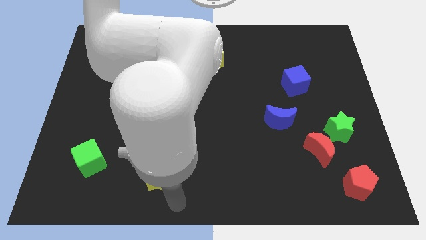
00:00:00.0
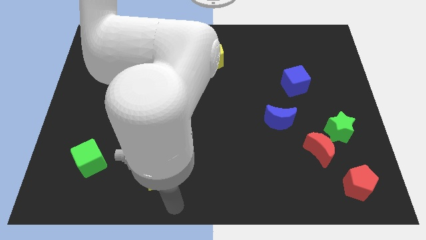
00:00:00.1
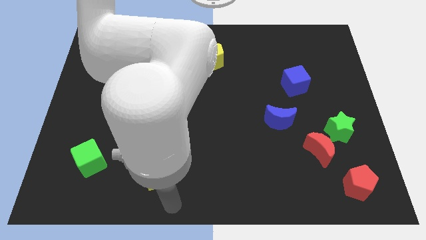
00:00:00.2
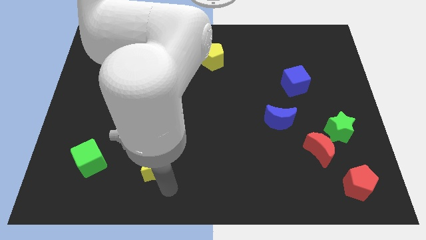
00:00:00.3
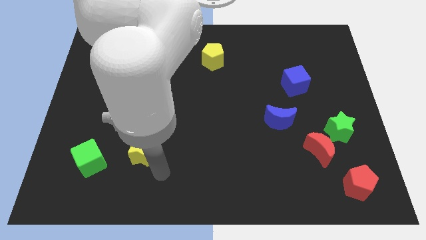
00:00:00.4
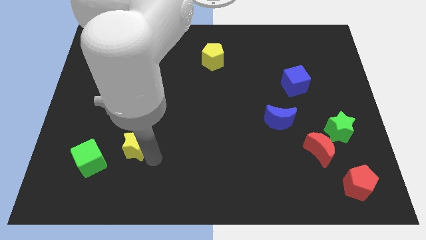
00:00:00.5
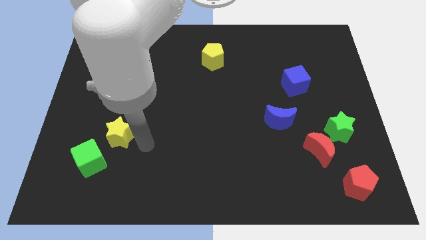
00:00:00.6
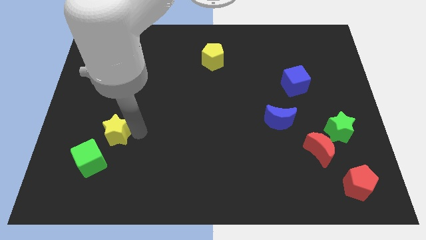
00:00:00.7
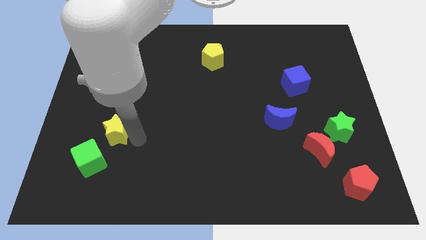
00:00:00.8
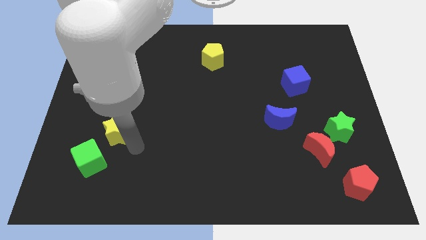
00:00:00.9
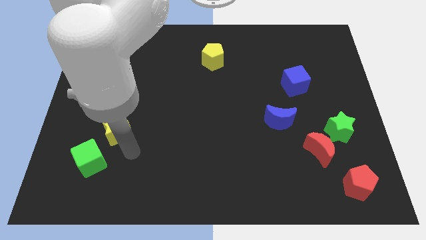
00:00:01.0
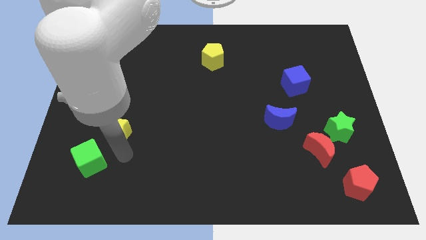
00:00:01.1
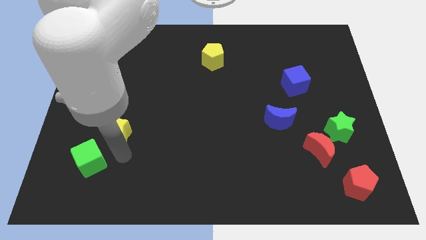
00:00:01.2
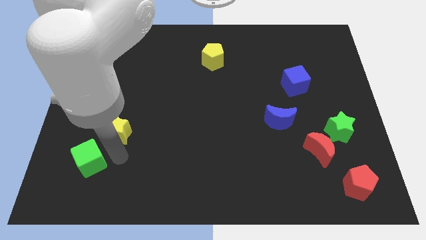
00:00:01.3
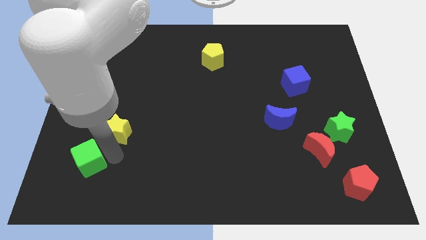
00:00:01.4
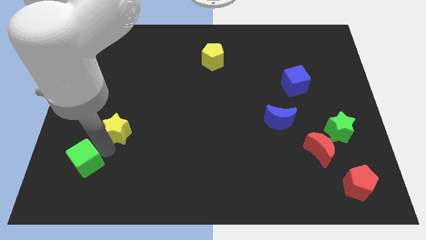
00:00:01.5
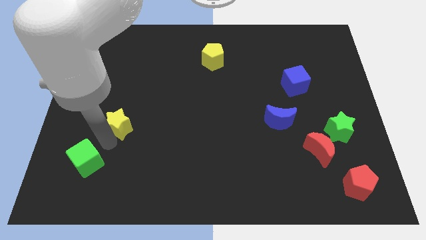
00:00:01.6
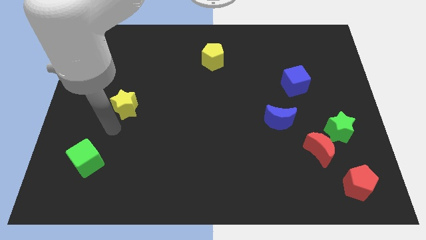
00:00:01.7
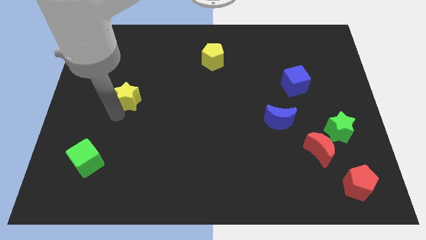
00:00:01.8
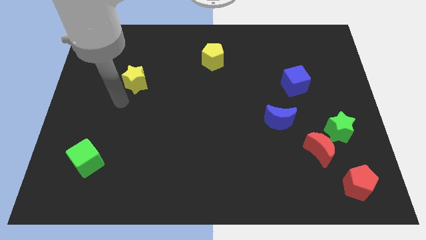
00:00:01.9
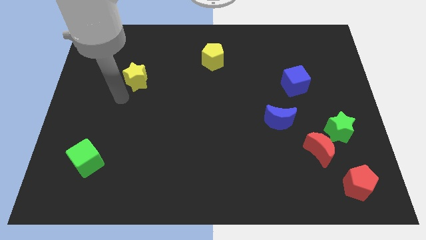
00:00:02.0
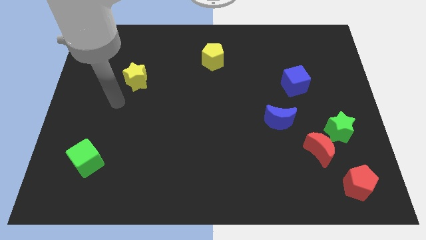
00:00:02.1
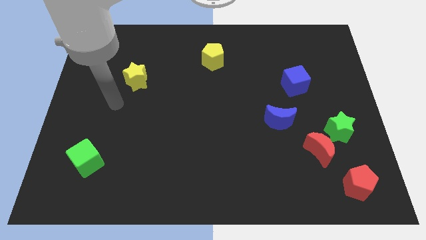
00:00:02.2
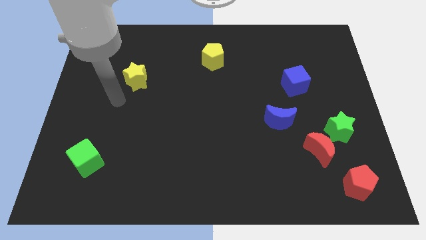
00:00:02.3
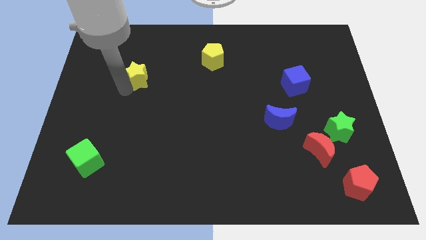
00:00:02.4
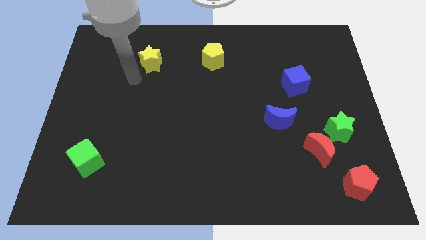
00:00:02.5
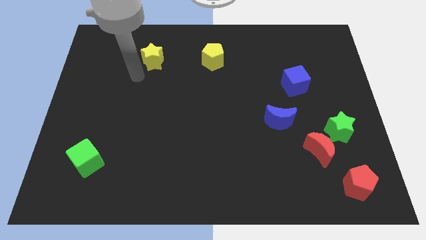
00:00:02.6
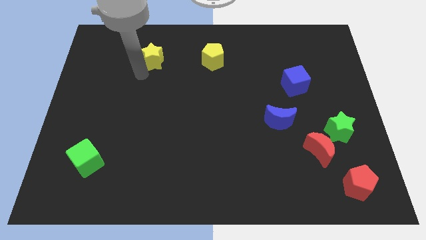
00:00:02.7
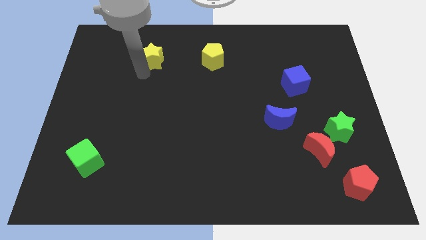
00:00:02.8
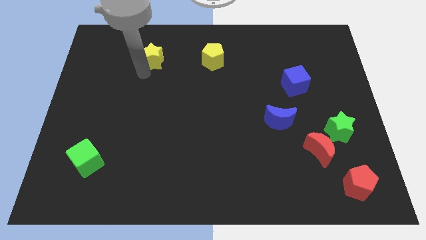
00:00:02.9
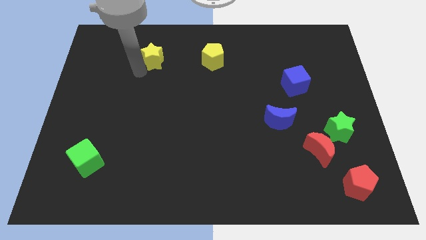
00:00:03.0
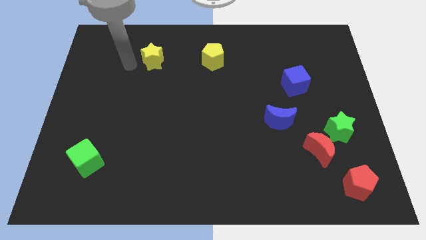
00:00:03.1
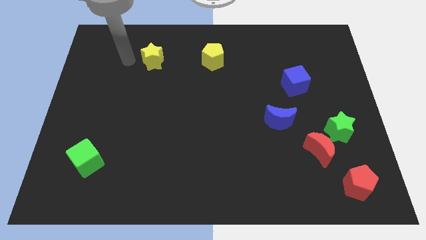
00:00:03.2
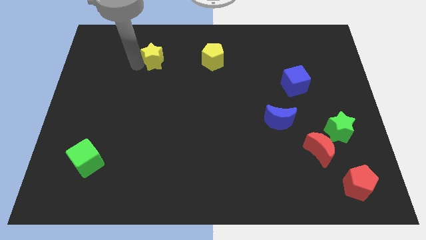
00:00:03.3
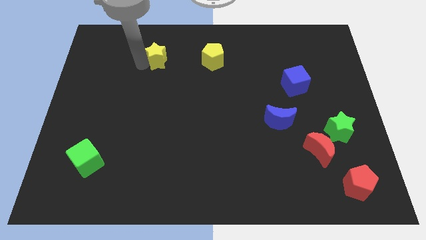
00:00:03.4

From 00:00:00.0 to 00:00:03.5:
put the yellow star parallel to the yellow pentagon

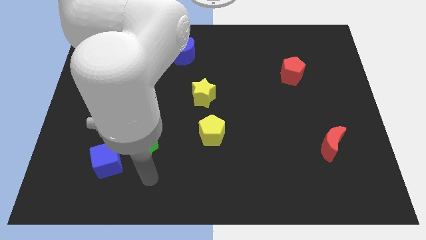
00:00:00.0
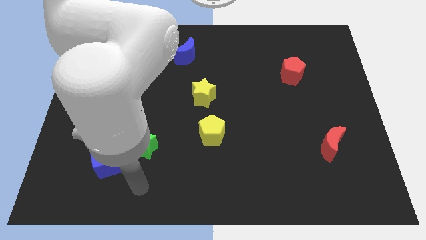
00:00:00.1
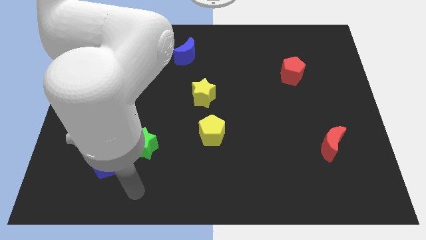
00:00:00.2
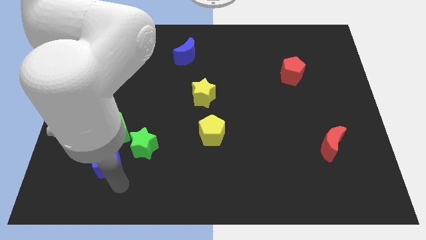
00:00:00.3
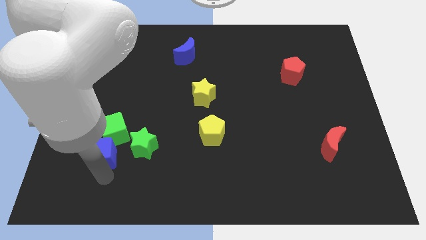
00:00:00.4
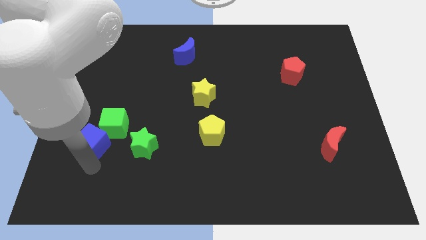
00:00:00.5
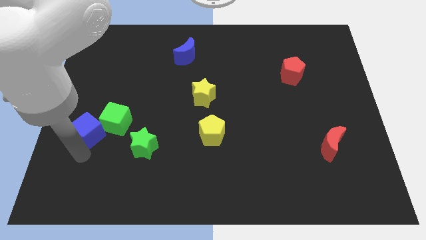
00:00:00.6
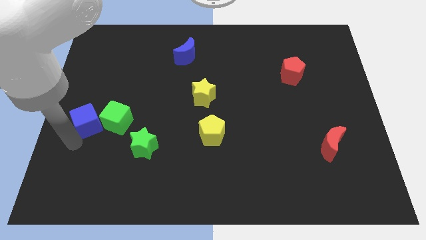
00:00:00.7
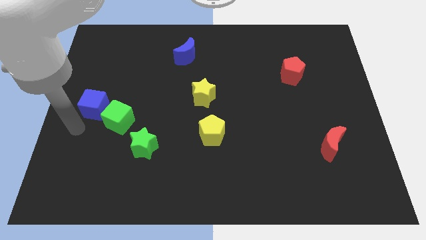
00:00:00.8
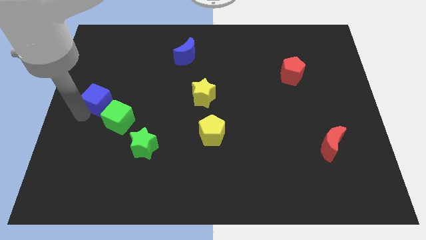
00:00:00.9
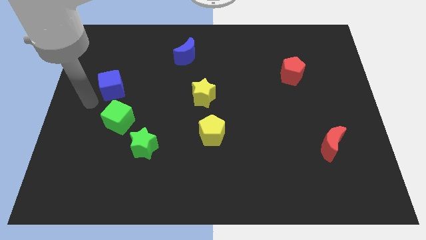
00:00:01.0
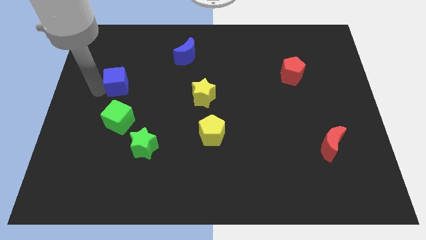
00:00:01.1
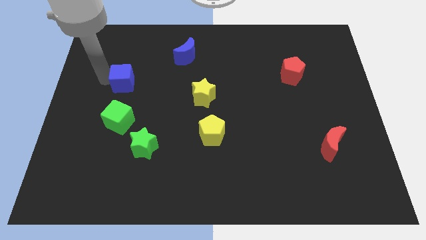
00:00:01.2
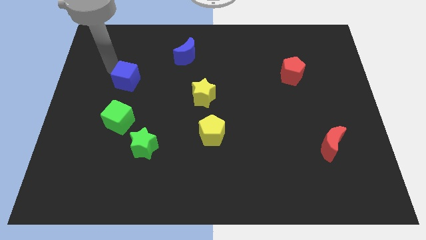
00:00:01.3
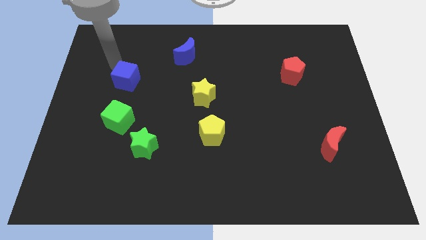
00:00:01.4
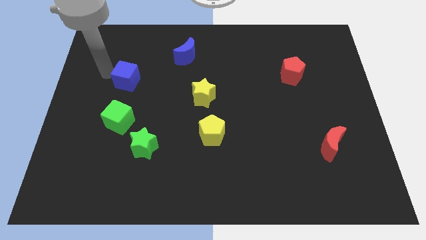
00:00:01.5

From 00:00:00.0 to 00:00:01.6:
move the blue cube towards top

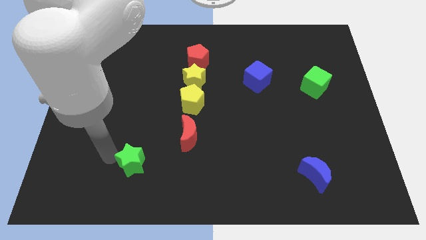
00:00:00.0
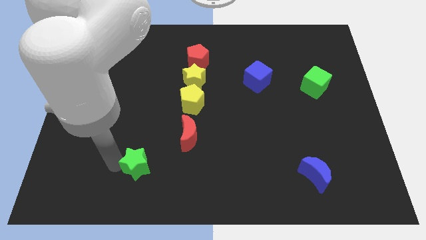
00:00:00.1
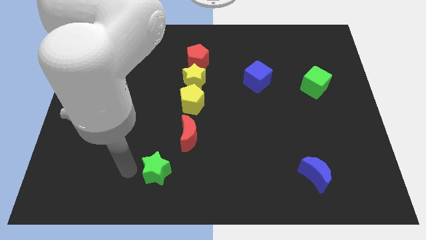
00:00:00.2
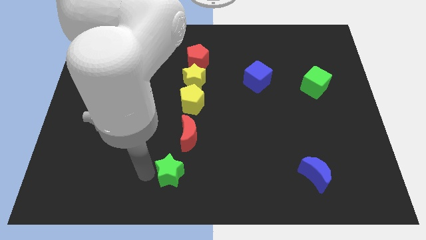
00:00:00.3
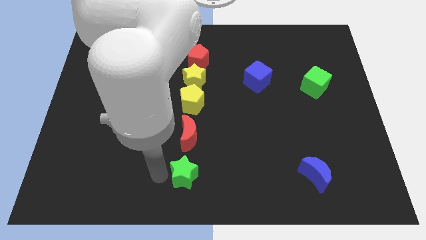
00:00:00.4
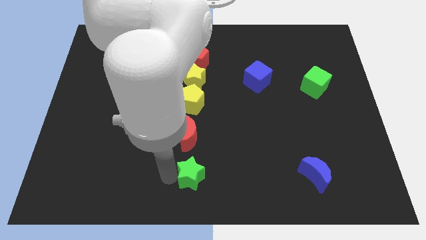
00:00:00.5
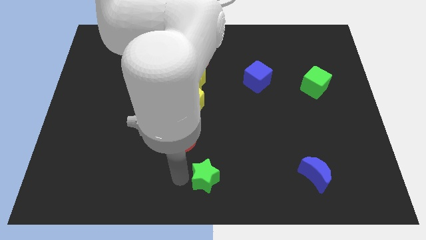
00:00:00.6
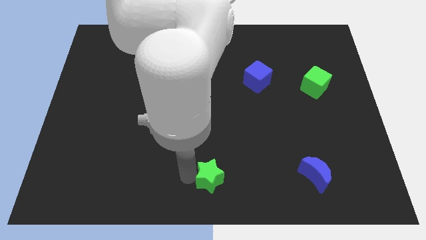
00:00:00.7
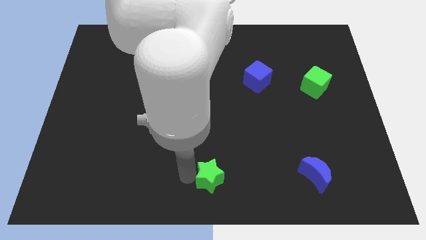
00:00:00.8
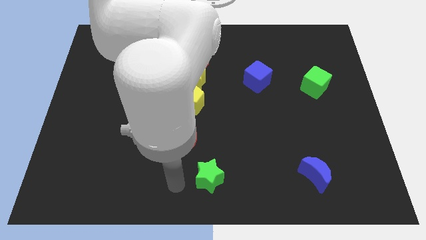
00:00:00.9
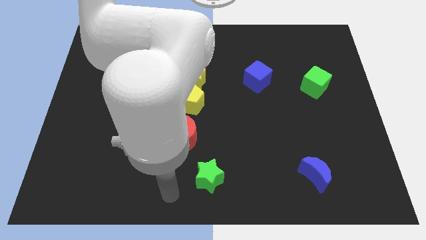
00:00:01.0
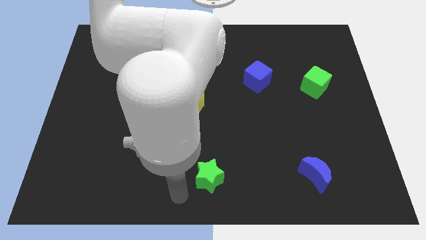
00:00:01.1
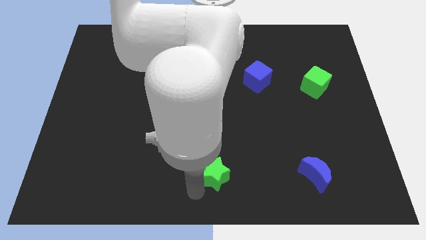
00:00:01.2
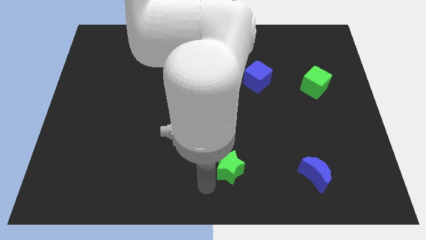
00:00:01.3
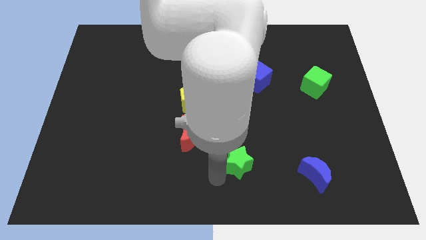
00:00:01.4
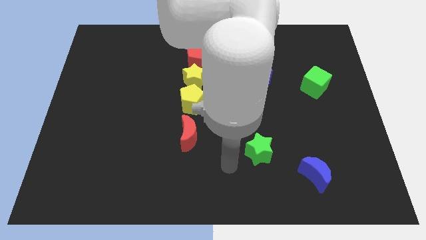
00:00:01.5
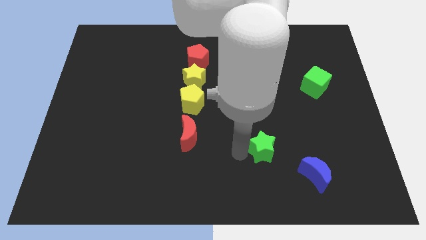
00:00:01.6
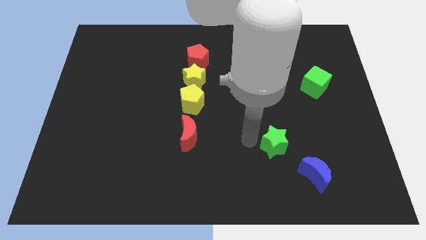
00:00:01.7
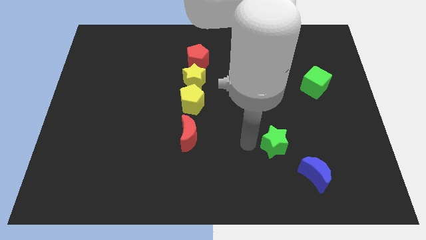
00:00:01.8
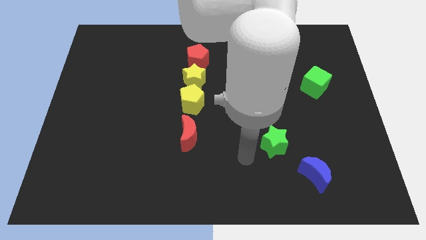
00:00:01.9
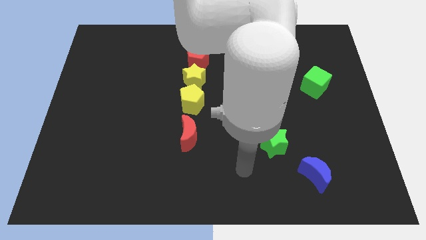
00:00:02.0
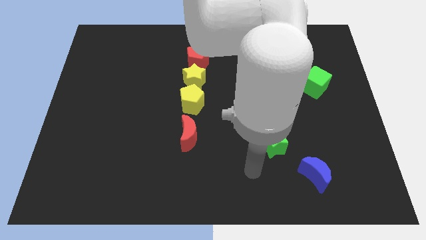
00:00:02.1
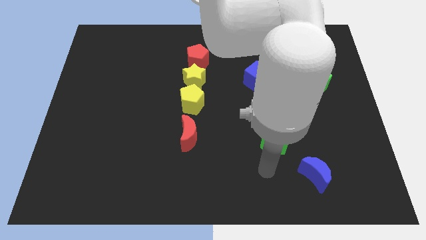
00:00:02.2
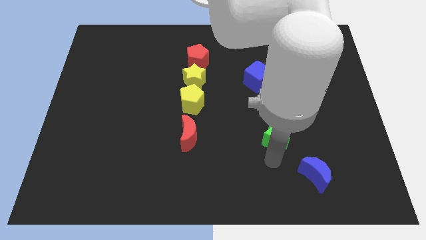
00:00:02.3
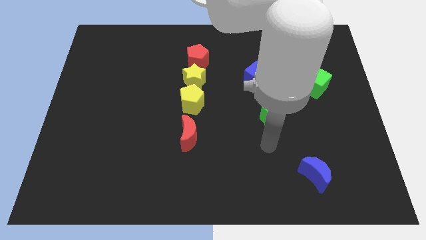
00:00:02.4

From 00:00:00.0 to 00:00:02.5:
move the green star to the horizontal right side of the red moon

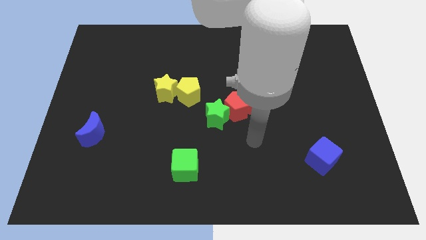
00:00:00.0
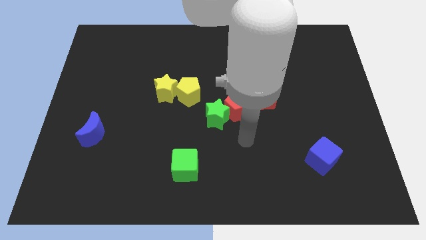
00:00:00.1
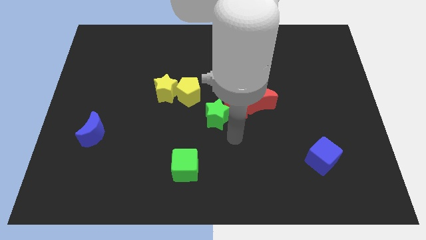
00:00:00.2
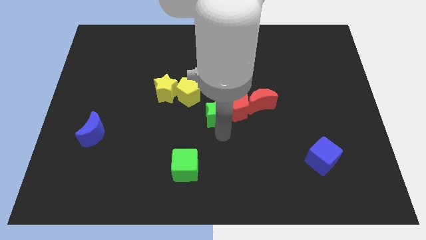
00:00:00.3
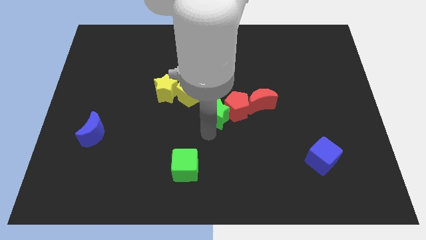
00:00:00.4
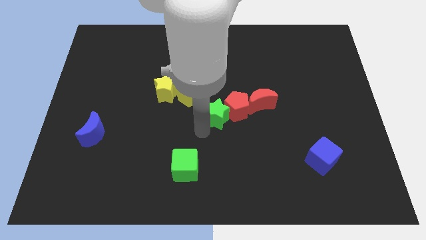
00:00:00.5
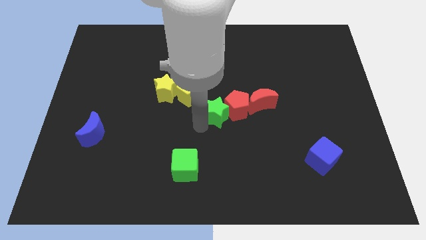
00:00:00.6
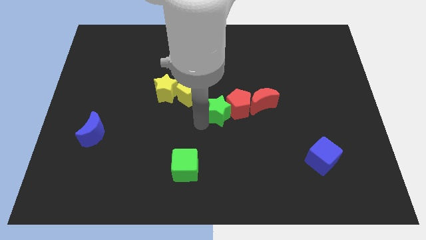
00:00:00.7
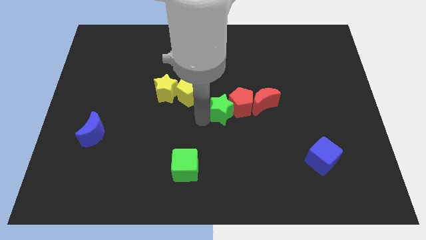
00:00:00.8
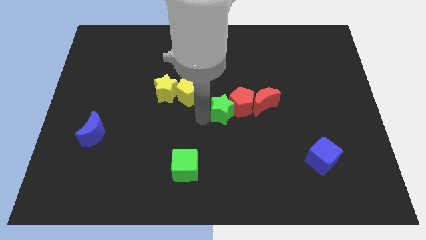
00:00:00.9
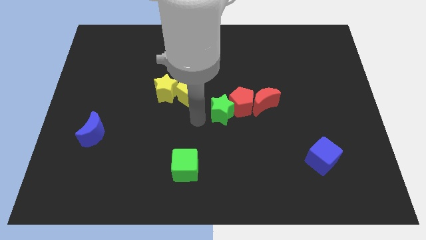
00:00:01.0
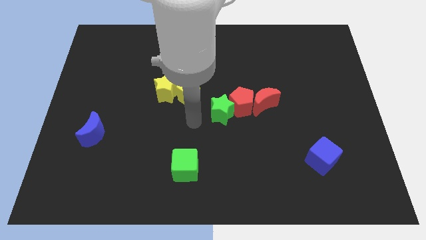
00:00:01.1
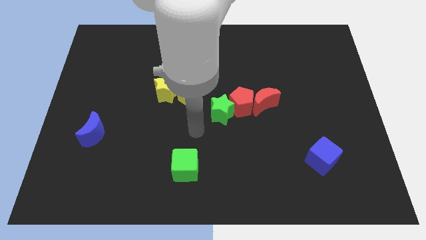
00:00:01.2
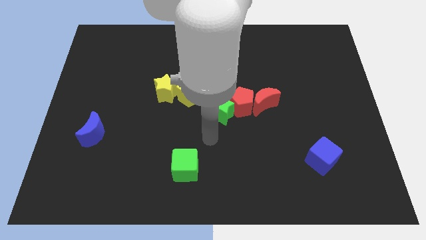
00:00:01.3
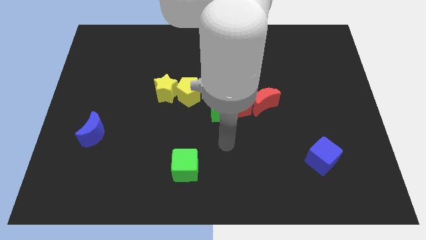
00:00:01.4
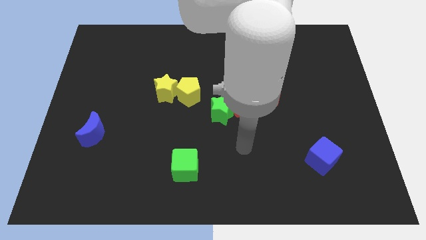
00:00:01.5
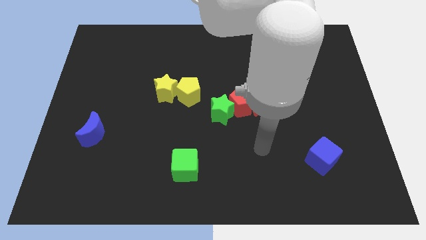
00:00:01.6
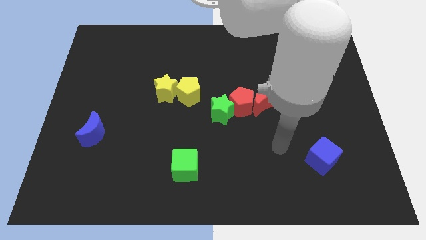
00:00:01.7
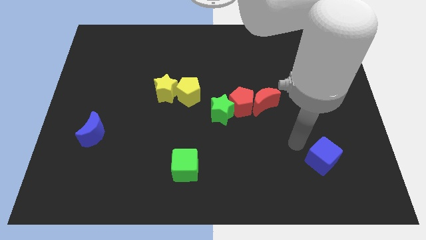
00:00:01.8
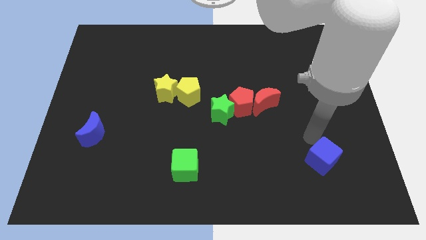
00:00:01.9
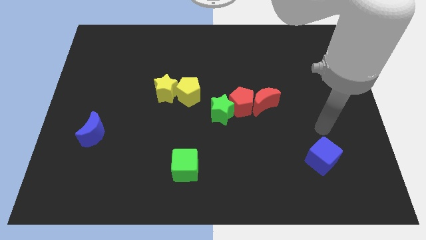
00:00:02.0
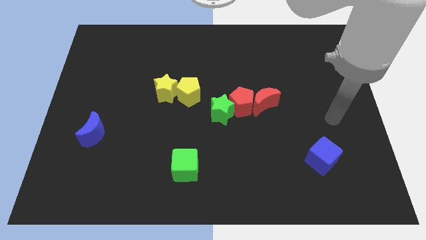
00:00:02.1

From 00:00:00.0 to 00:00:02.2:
push the red pentagon with the green star
